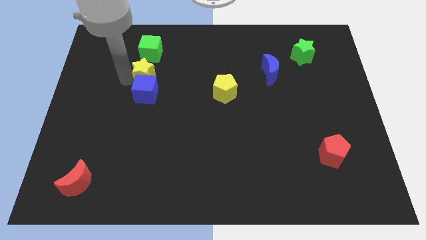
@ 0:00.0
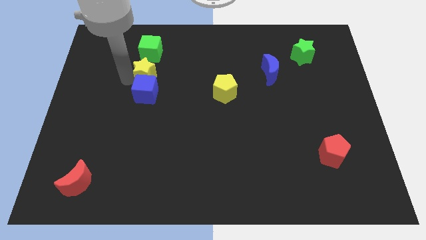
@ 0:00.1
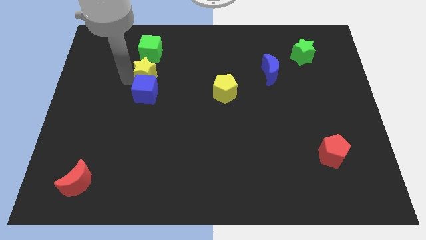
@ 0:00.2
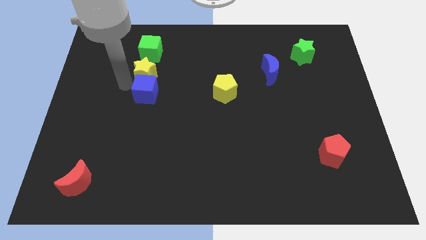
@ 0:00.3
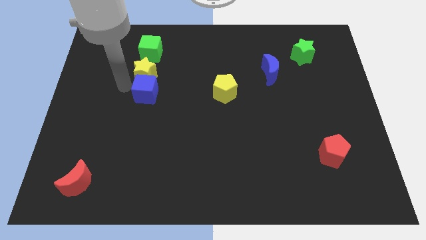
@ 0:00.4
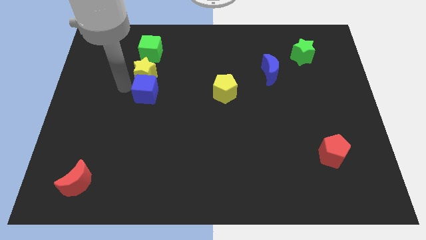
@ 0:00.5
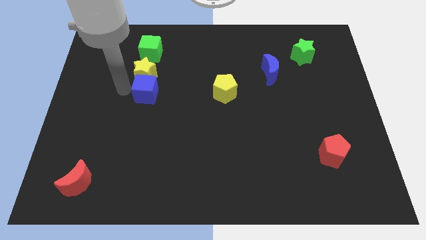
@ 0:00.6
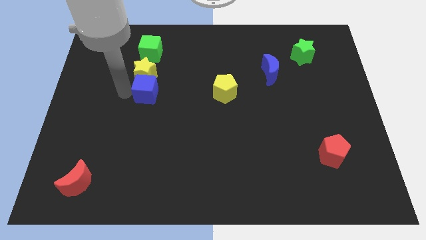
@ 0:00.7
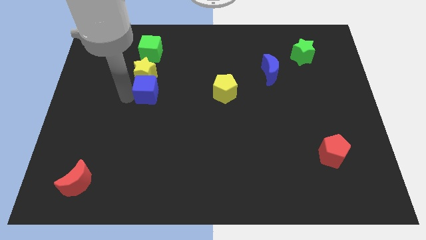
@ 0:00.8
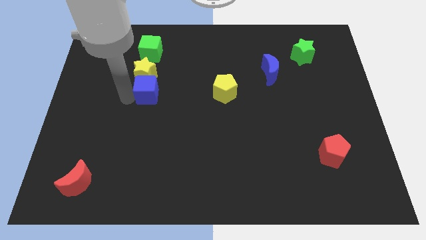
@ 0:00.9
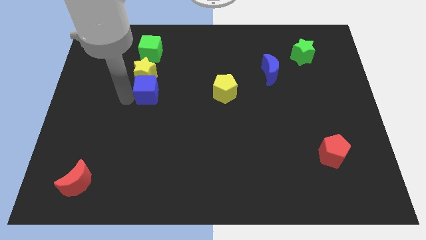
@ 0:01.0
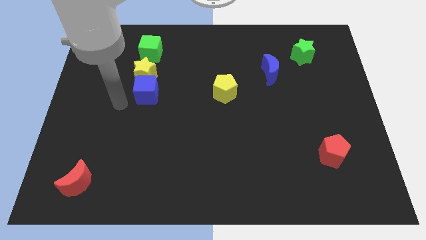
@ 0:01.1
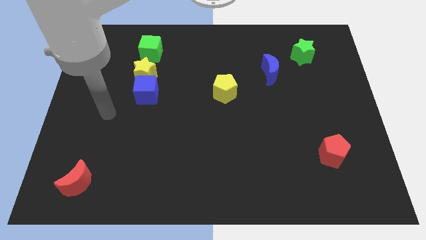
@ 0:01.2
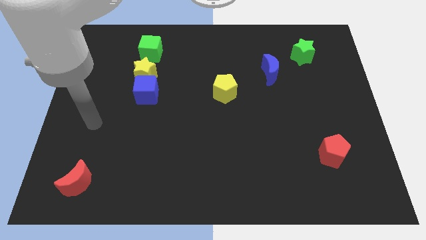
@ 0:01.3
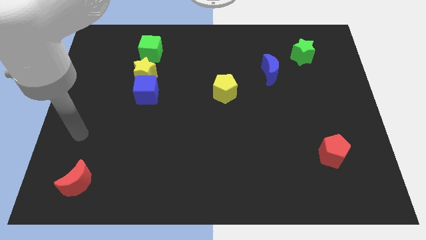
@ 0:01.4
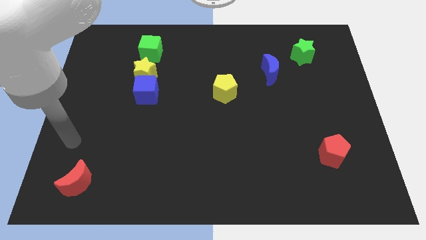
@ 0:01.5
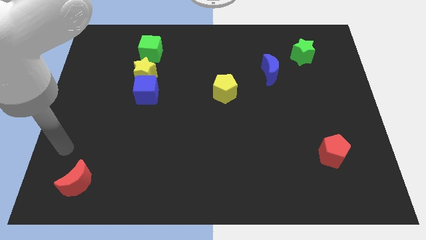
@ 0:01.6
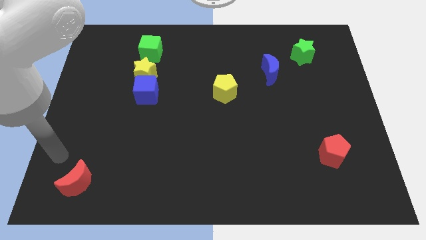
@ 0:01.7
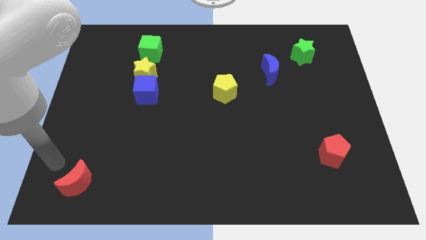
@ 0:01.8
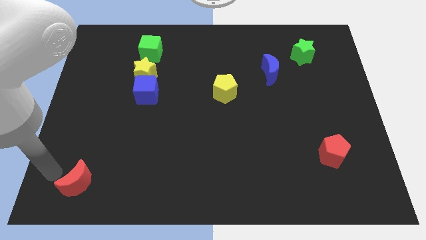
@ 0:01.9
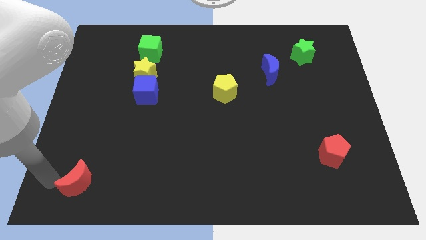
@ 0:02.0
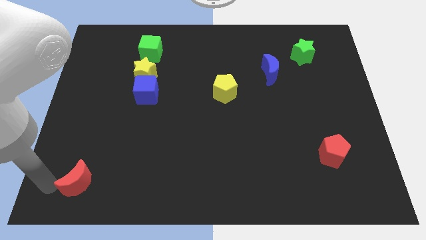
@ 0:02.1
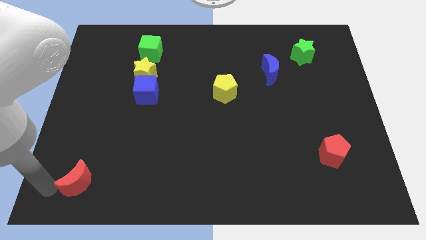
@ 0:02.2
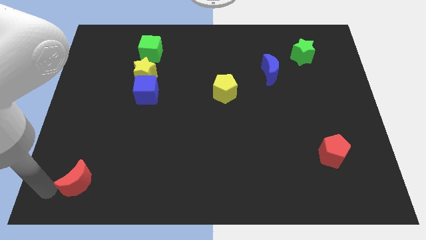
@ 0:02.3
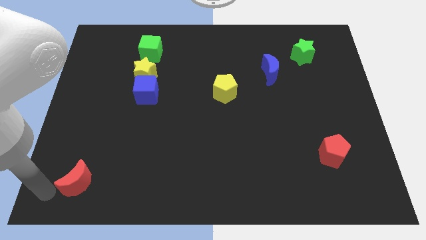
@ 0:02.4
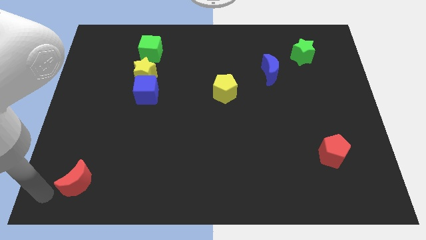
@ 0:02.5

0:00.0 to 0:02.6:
move your hand to the left of the red crescent

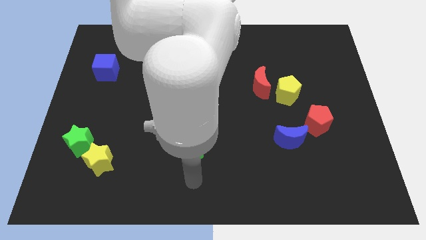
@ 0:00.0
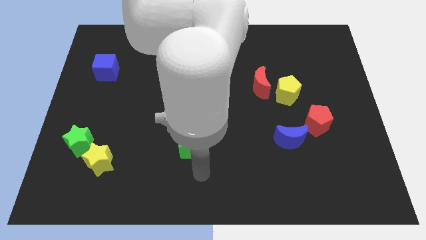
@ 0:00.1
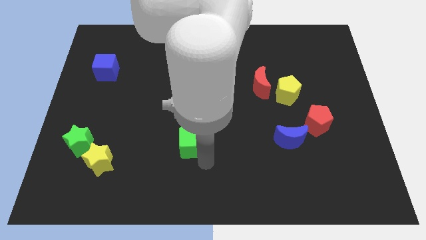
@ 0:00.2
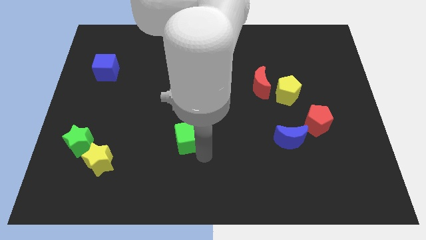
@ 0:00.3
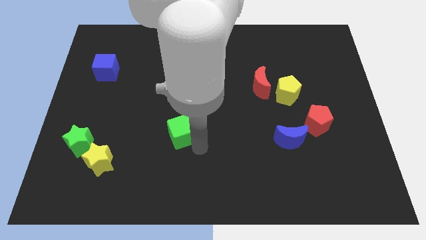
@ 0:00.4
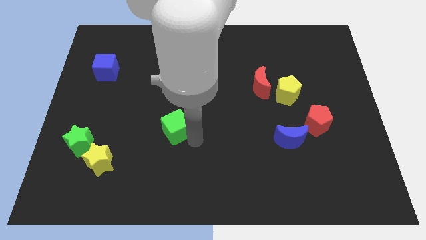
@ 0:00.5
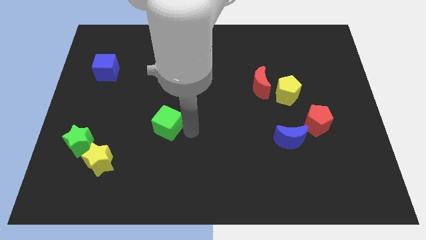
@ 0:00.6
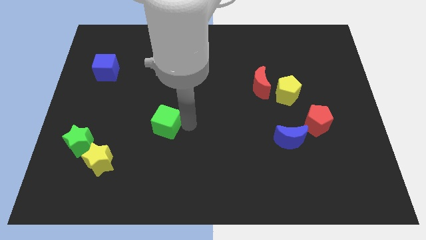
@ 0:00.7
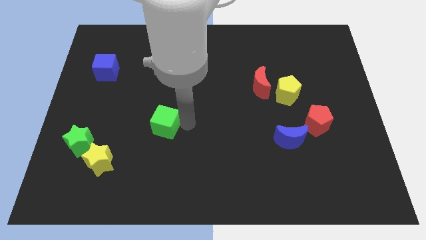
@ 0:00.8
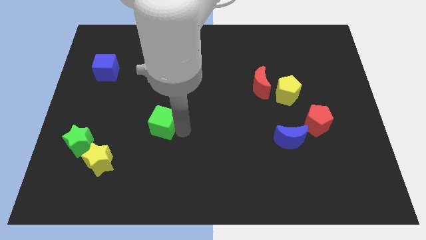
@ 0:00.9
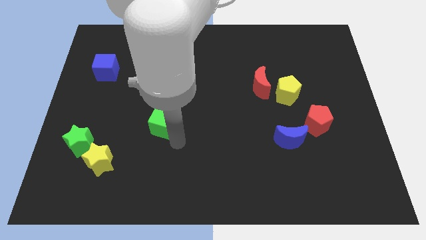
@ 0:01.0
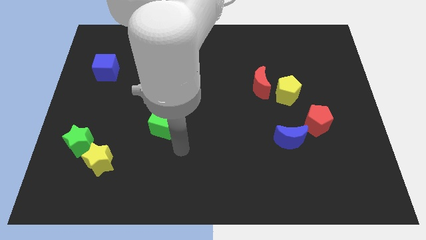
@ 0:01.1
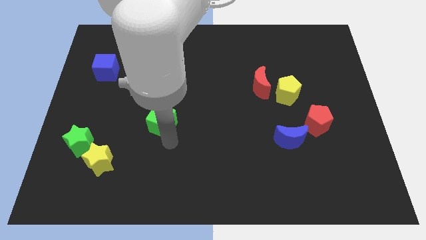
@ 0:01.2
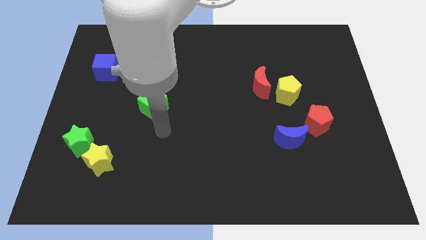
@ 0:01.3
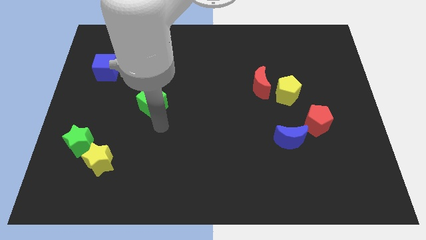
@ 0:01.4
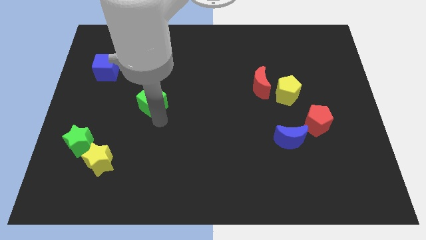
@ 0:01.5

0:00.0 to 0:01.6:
push the green cube diagonally on the top right side of the green star

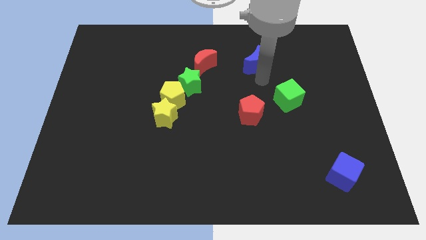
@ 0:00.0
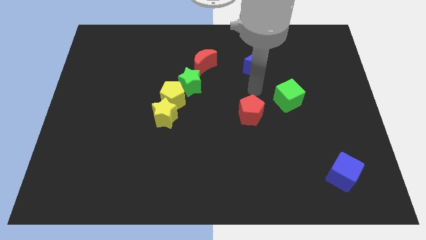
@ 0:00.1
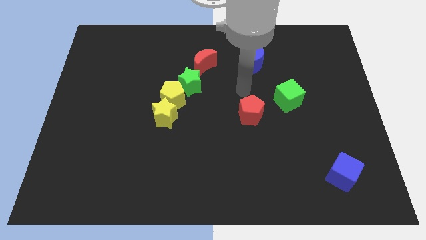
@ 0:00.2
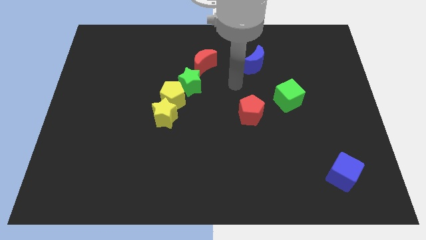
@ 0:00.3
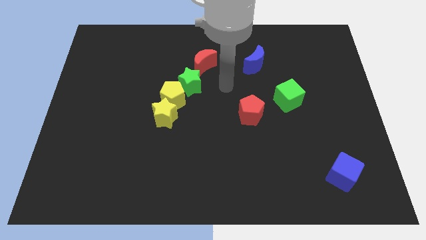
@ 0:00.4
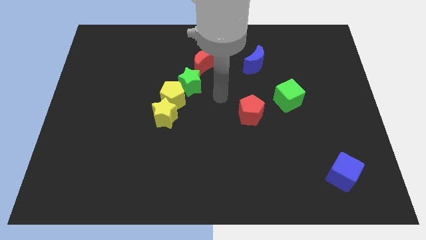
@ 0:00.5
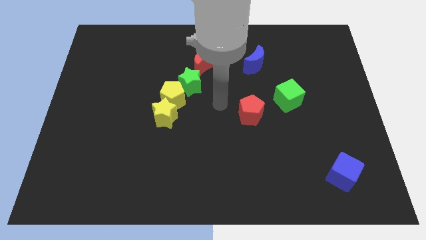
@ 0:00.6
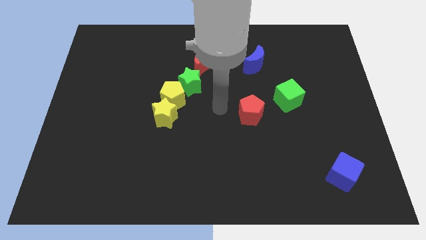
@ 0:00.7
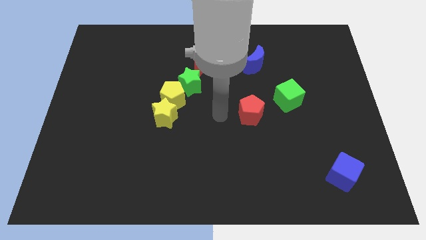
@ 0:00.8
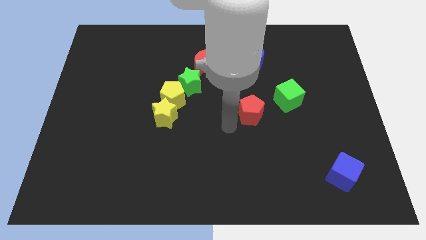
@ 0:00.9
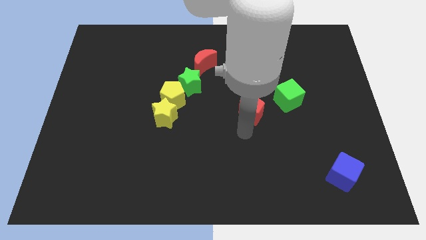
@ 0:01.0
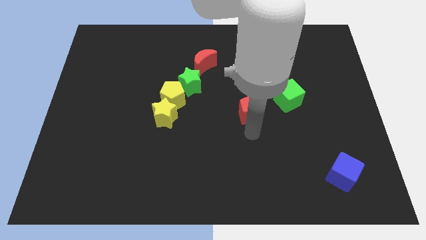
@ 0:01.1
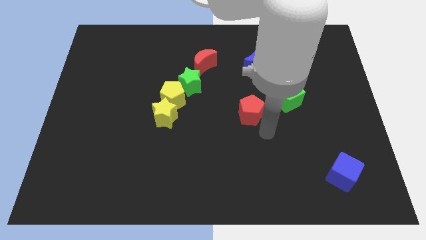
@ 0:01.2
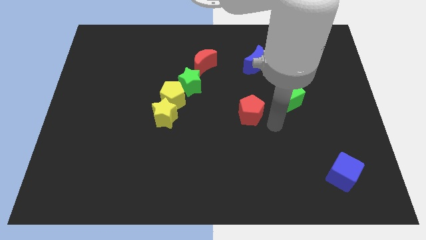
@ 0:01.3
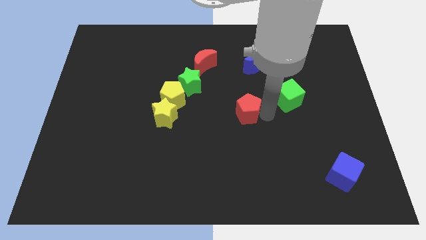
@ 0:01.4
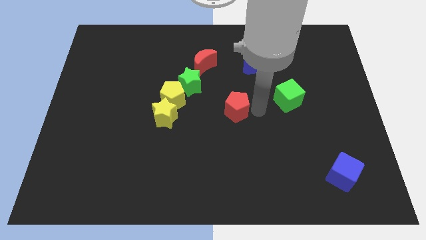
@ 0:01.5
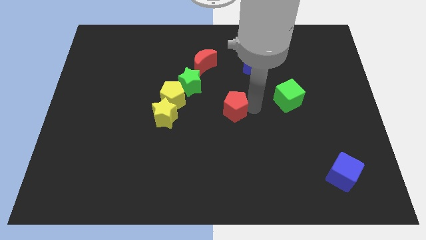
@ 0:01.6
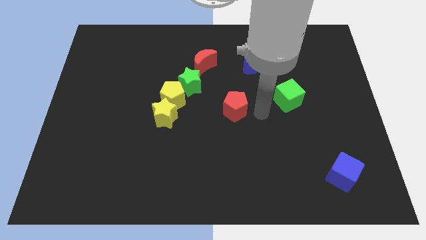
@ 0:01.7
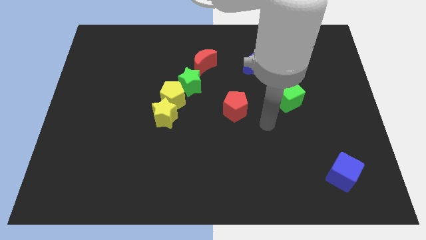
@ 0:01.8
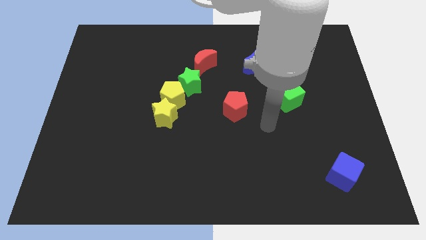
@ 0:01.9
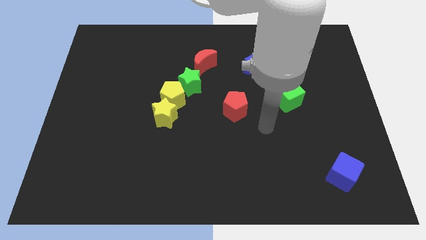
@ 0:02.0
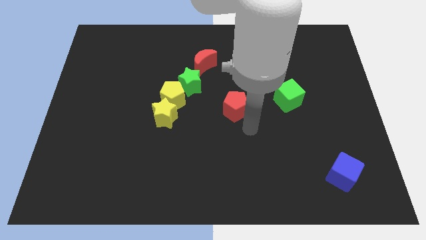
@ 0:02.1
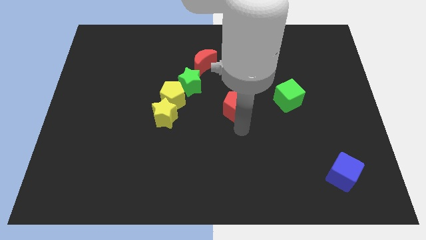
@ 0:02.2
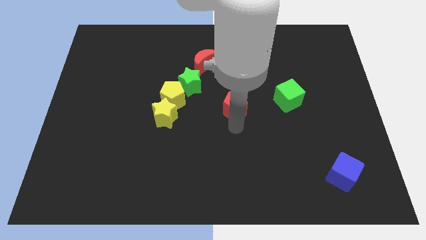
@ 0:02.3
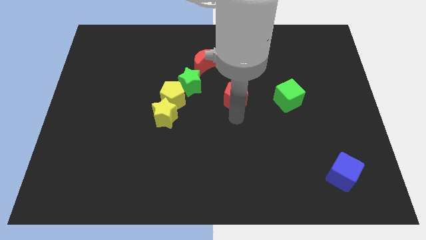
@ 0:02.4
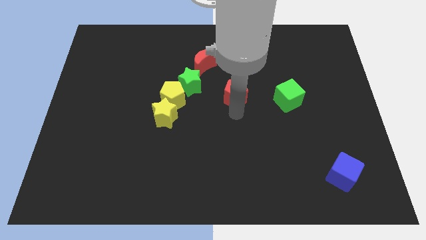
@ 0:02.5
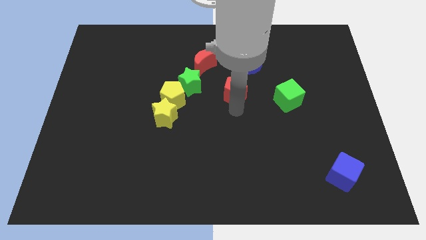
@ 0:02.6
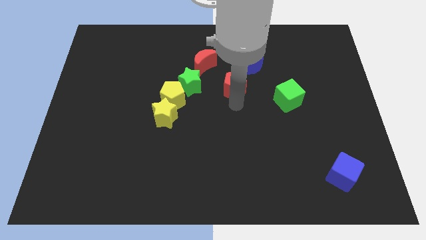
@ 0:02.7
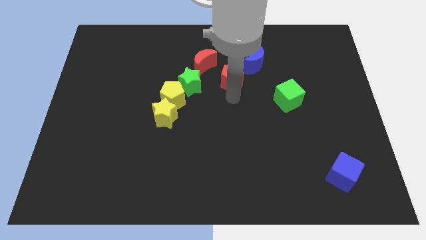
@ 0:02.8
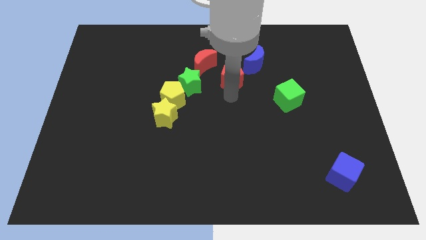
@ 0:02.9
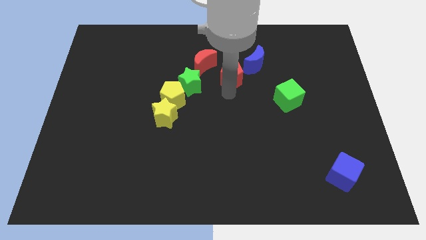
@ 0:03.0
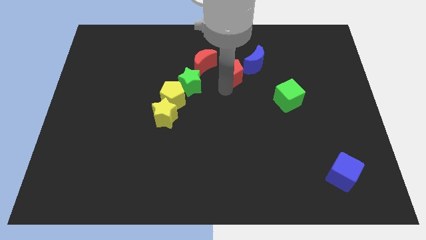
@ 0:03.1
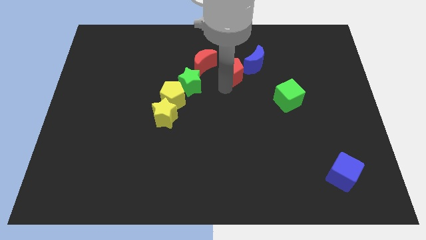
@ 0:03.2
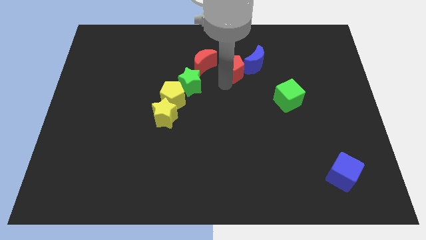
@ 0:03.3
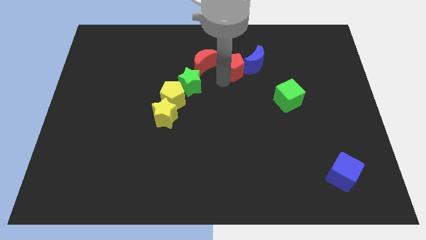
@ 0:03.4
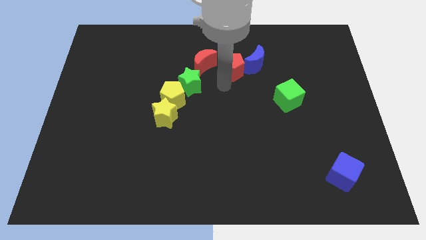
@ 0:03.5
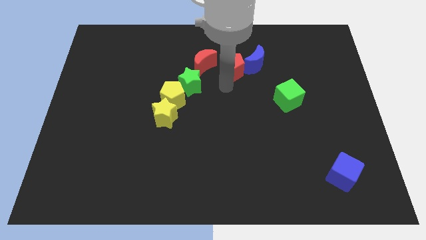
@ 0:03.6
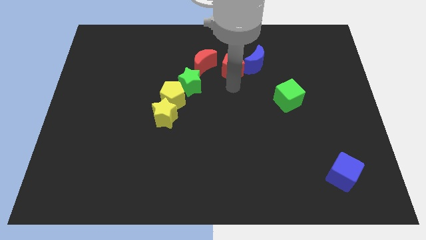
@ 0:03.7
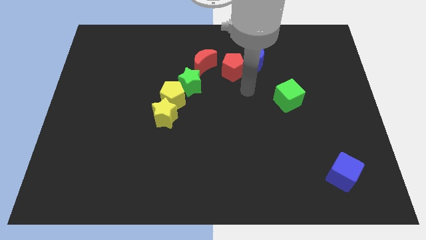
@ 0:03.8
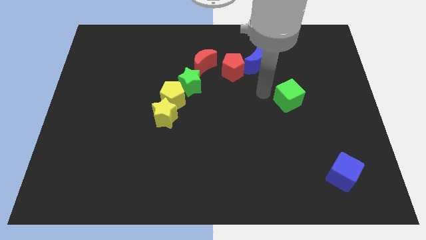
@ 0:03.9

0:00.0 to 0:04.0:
move the red pentagon to the right of the red crescent

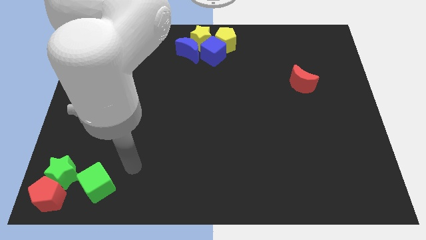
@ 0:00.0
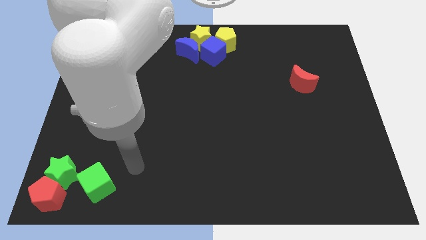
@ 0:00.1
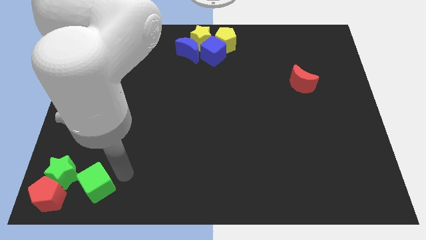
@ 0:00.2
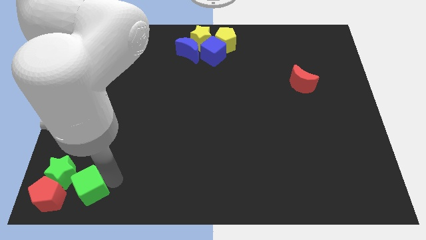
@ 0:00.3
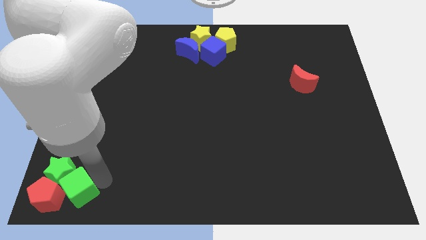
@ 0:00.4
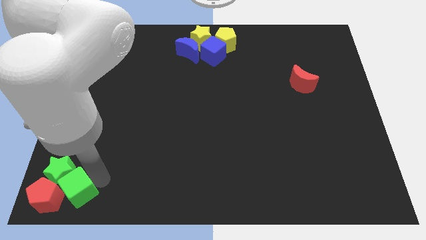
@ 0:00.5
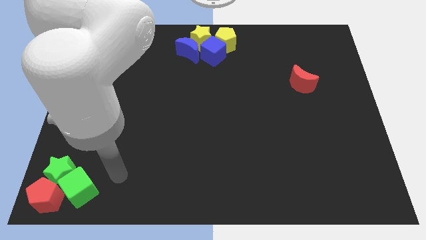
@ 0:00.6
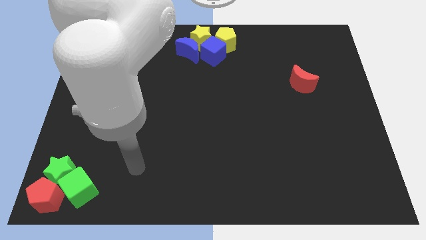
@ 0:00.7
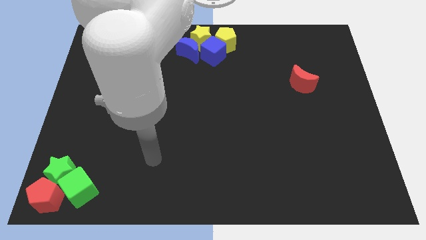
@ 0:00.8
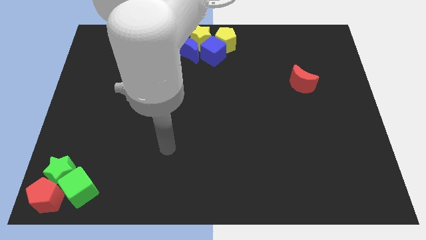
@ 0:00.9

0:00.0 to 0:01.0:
push the green cube into the green star and red pentagon

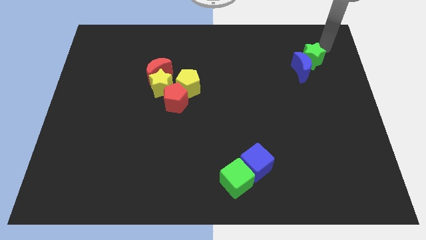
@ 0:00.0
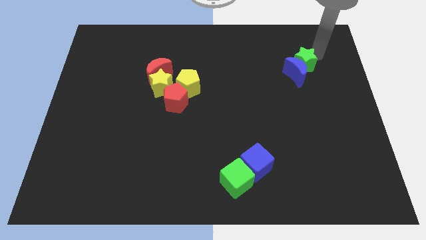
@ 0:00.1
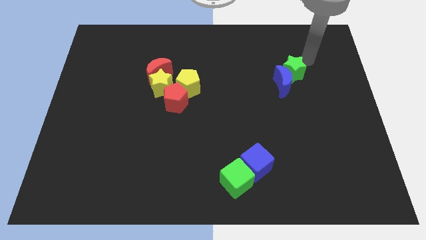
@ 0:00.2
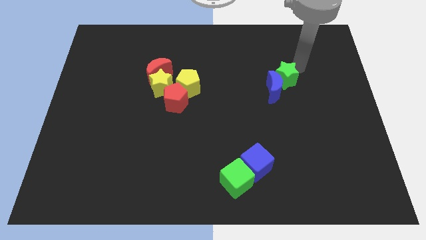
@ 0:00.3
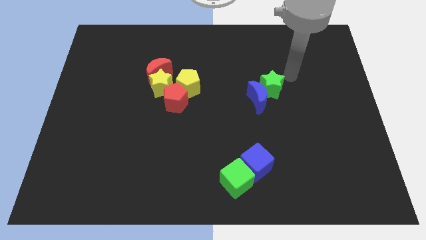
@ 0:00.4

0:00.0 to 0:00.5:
push the green star and blue moon towards the center of the board
